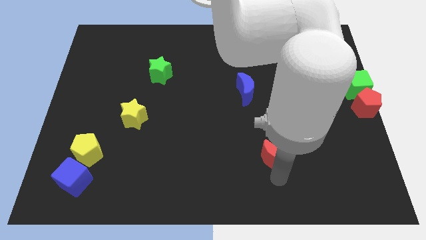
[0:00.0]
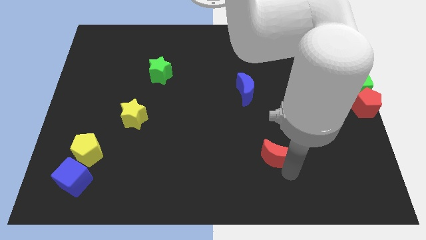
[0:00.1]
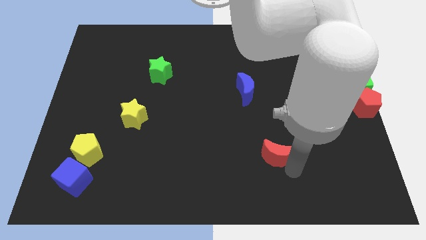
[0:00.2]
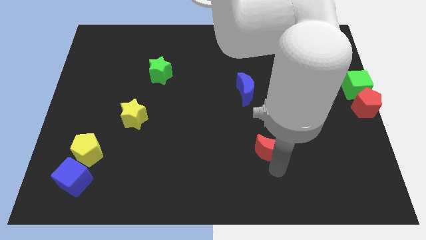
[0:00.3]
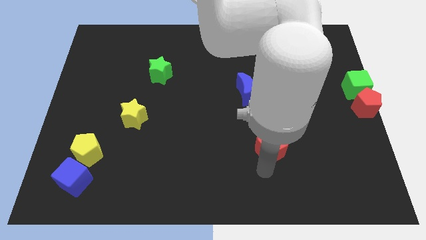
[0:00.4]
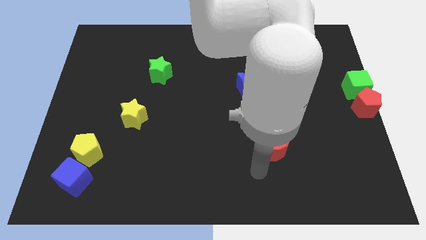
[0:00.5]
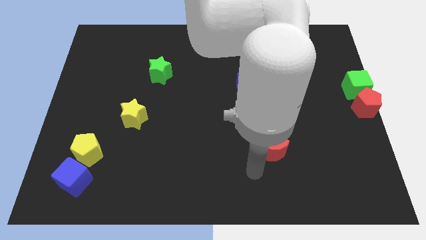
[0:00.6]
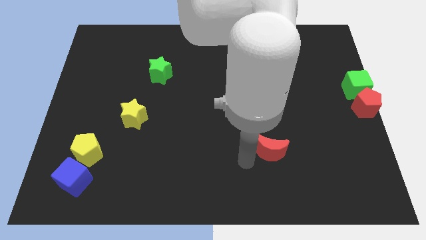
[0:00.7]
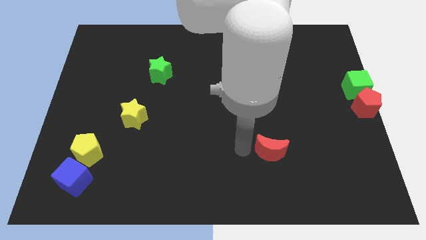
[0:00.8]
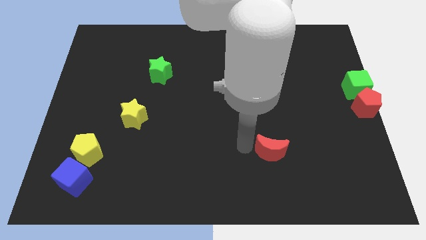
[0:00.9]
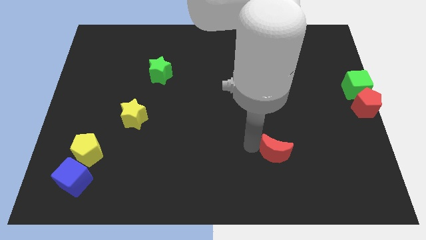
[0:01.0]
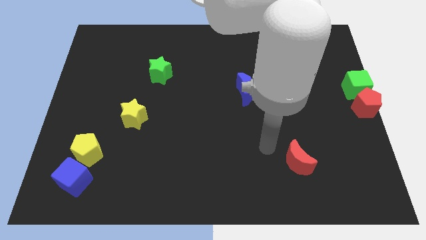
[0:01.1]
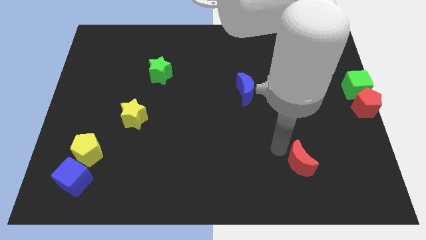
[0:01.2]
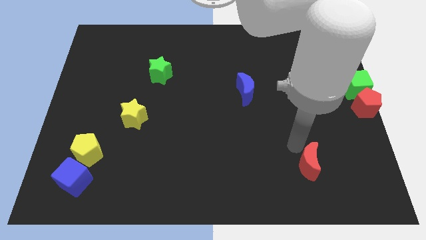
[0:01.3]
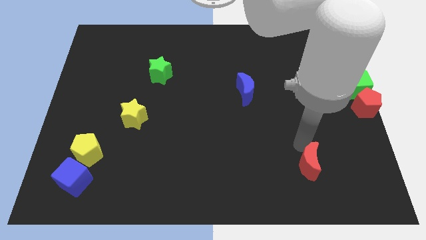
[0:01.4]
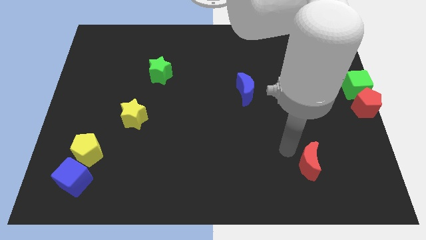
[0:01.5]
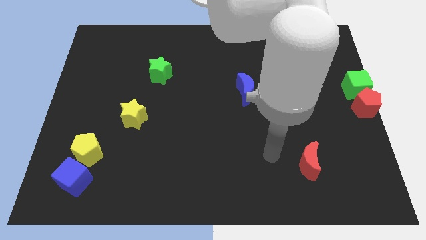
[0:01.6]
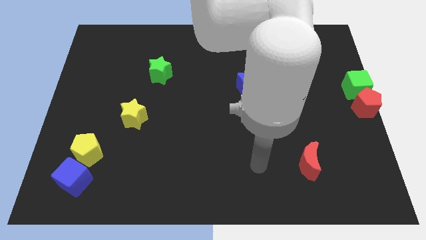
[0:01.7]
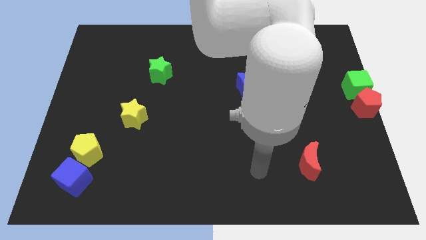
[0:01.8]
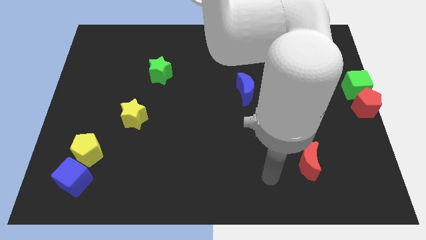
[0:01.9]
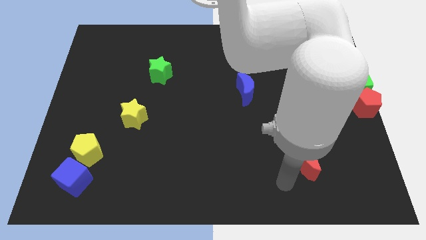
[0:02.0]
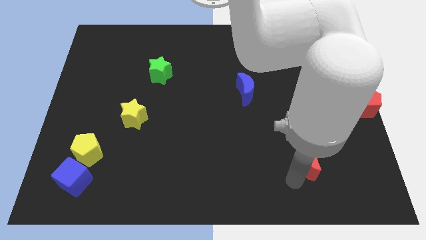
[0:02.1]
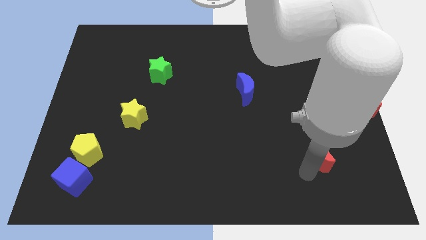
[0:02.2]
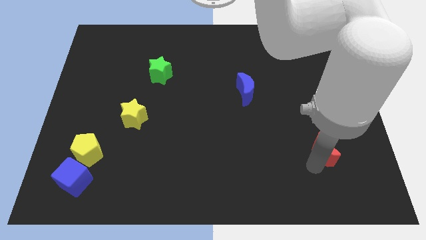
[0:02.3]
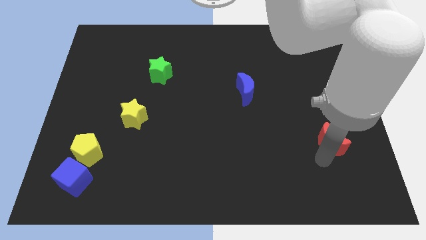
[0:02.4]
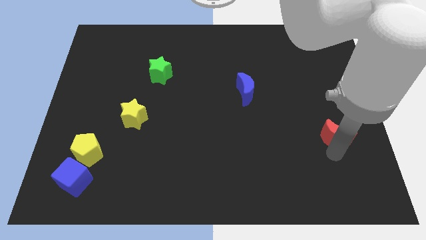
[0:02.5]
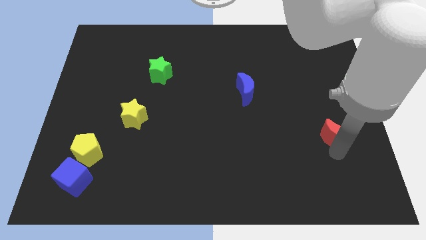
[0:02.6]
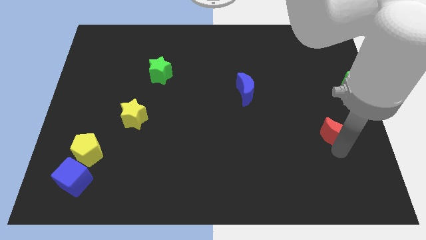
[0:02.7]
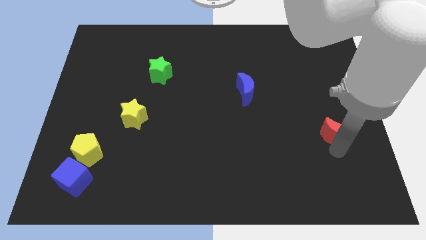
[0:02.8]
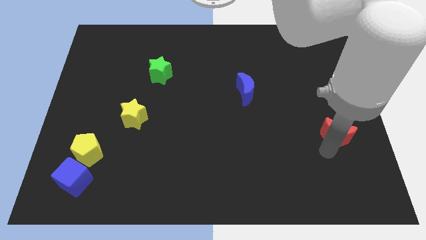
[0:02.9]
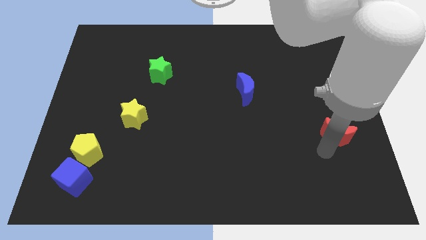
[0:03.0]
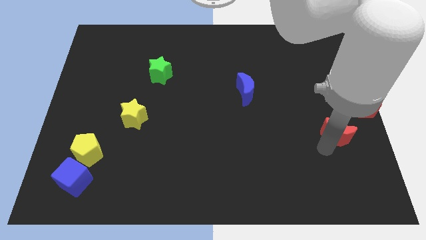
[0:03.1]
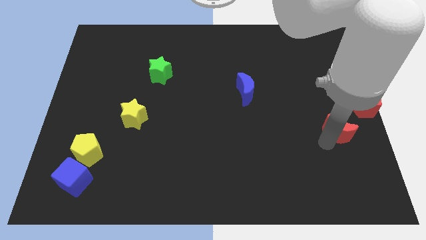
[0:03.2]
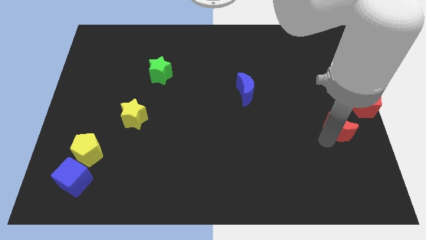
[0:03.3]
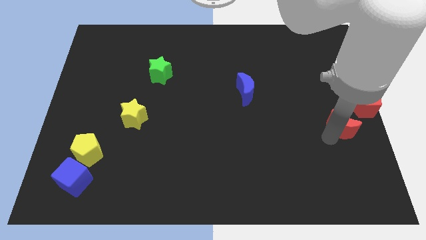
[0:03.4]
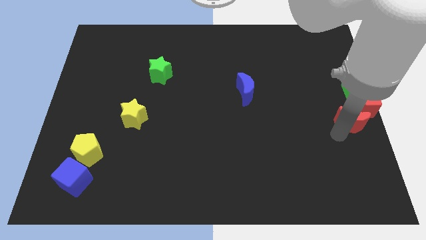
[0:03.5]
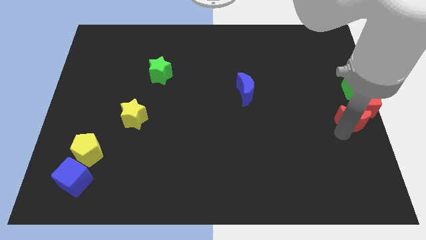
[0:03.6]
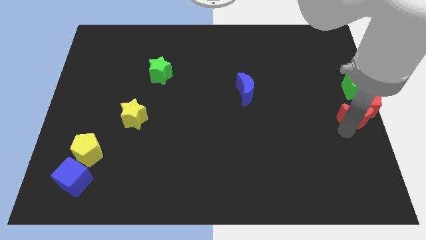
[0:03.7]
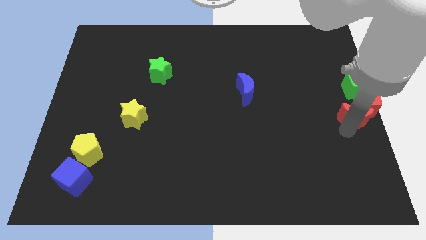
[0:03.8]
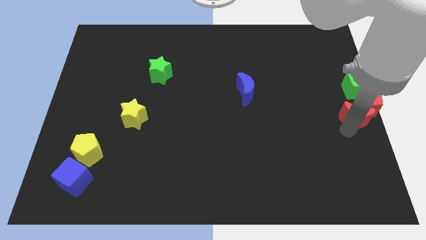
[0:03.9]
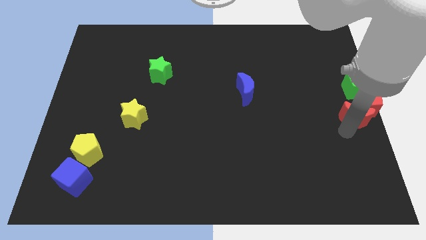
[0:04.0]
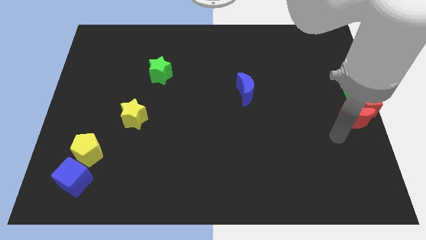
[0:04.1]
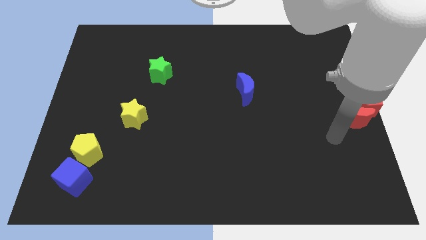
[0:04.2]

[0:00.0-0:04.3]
push the red moon close to the red pentagon

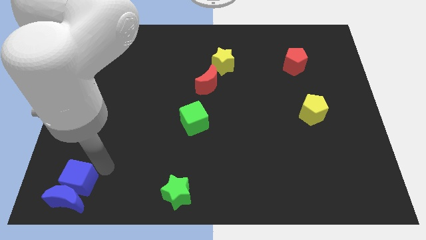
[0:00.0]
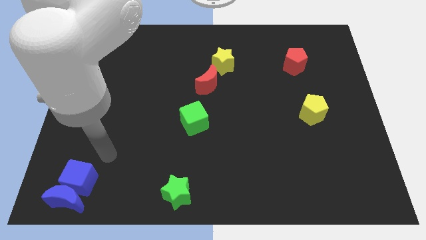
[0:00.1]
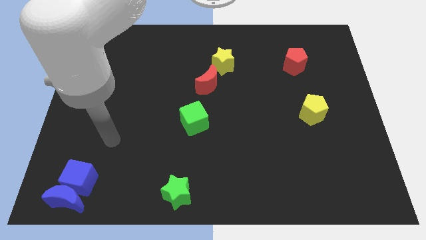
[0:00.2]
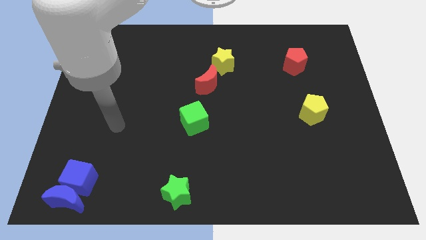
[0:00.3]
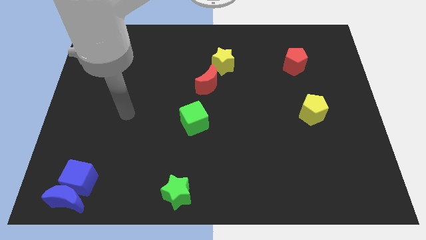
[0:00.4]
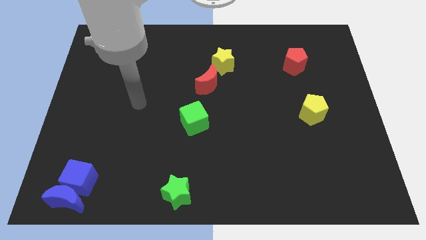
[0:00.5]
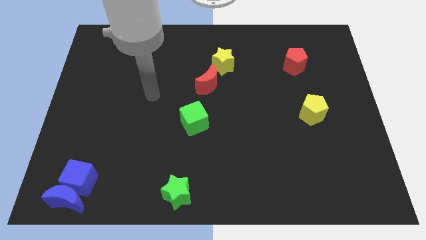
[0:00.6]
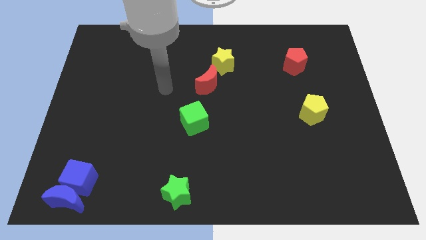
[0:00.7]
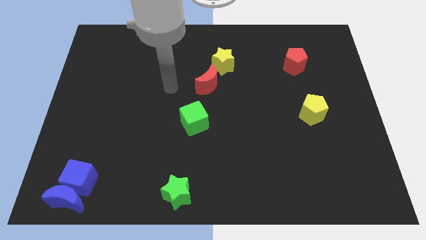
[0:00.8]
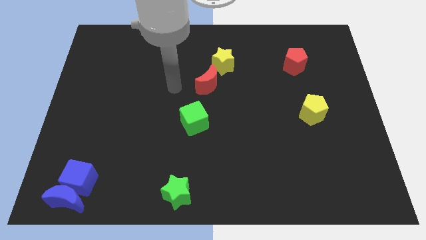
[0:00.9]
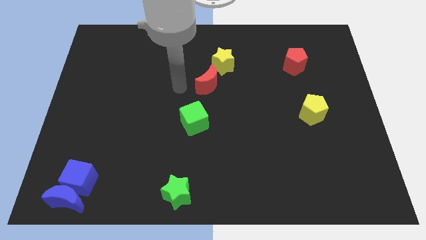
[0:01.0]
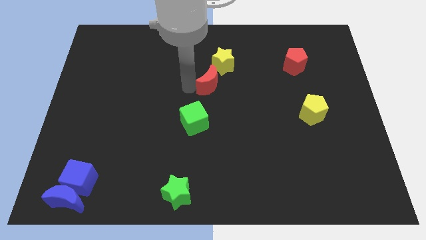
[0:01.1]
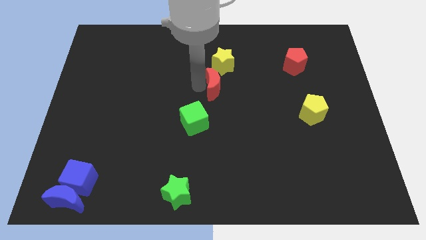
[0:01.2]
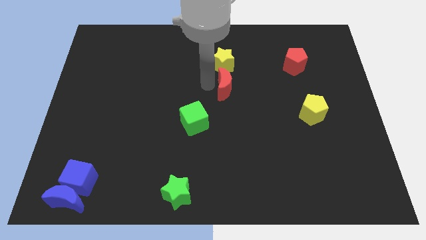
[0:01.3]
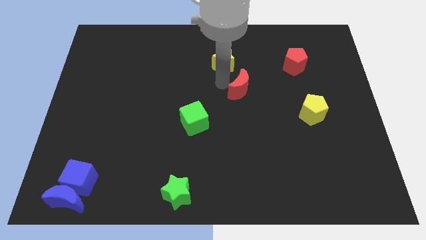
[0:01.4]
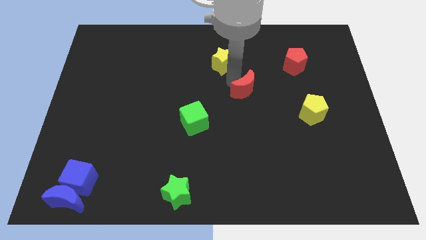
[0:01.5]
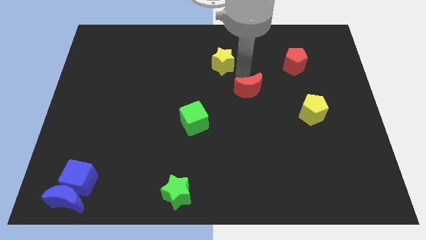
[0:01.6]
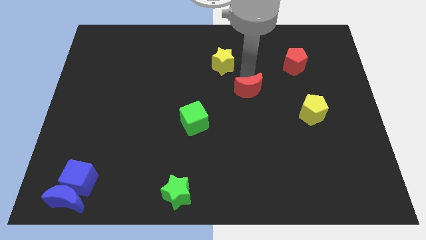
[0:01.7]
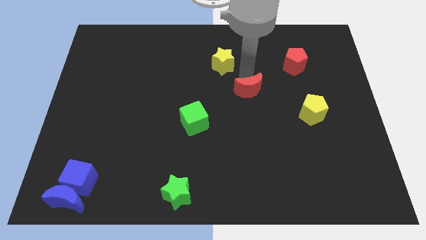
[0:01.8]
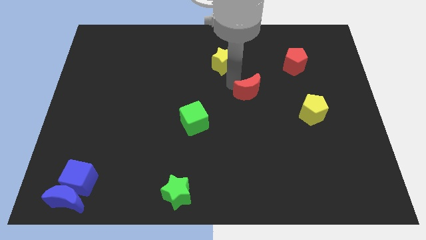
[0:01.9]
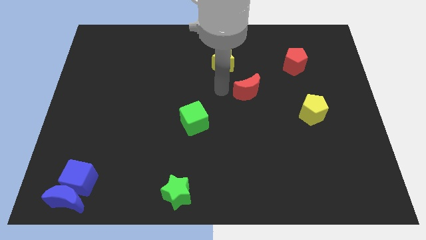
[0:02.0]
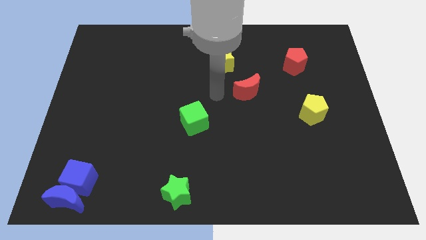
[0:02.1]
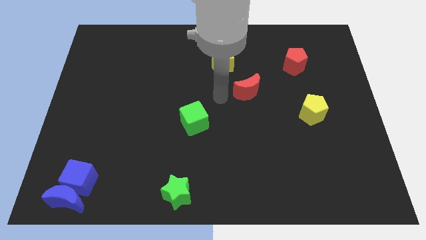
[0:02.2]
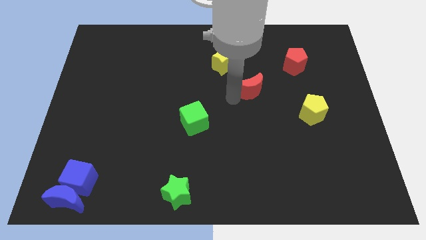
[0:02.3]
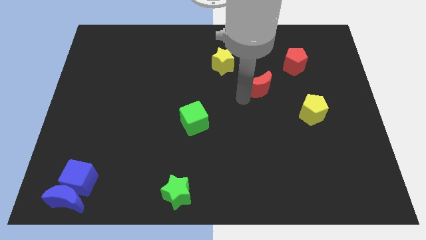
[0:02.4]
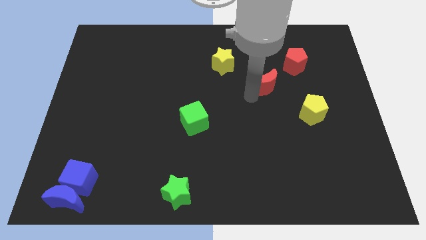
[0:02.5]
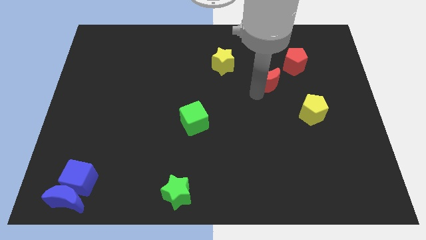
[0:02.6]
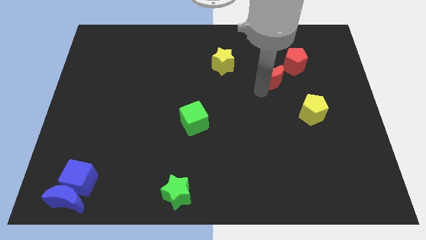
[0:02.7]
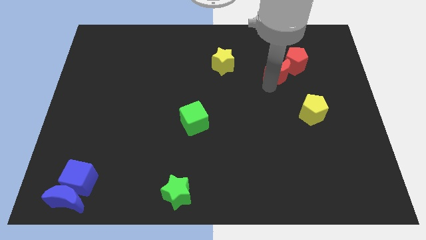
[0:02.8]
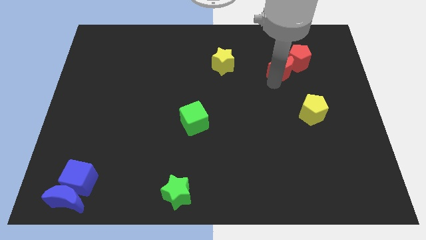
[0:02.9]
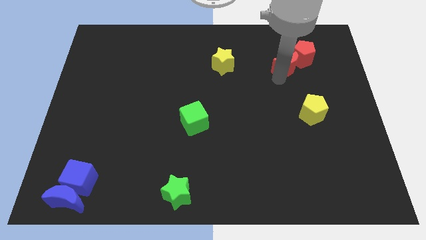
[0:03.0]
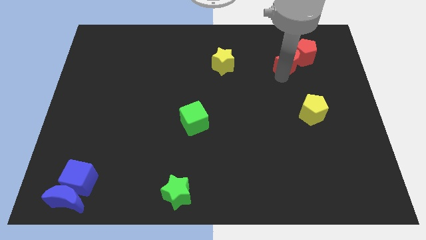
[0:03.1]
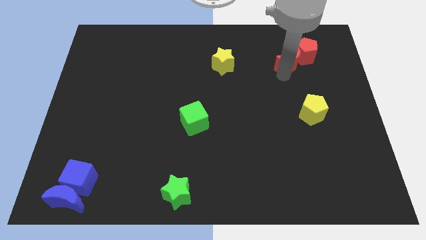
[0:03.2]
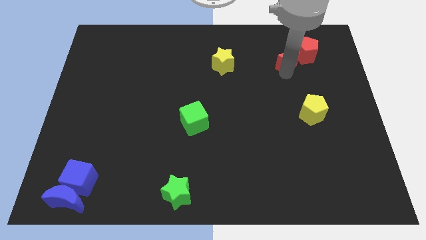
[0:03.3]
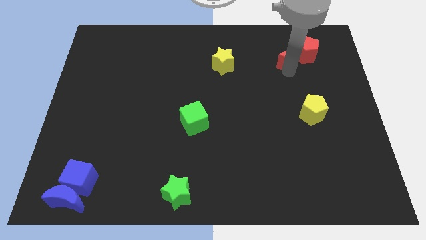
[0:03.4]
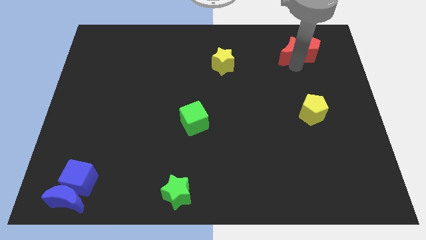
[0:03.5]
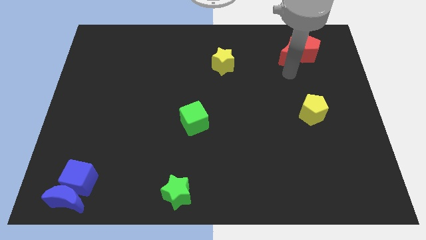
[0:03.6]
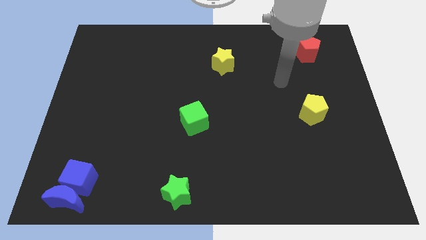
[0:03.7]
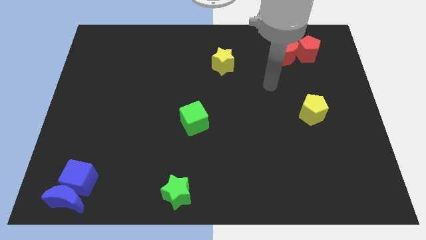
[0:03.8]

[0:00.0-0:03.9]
push the red pentagon with the red moon

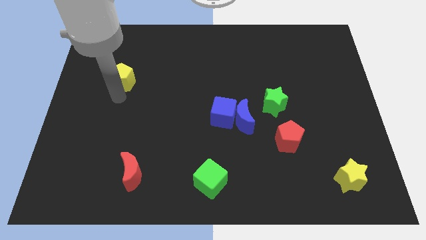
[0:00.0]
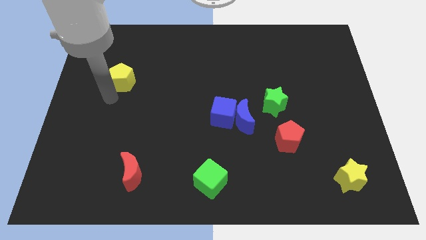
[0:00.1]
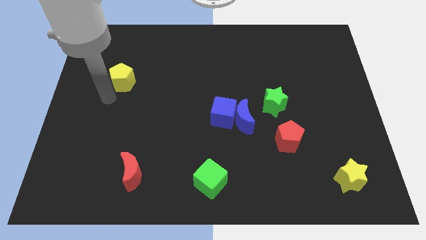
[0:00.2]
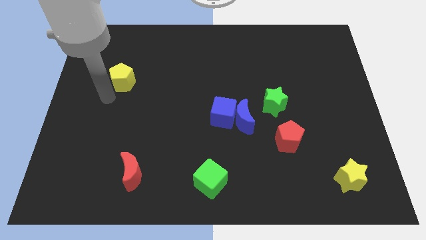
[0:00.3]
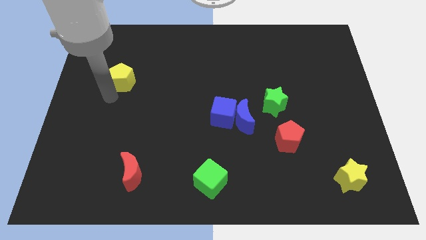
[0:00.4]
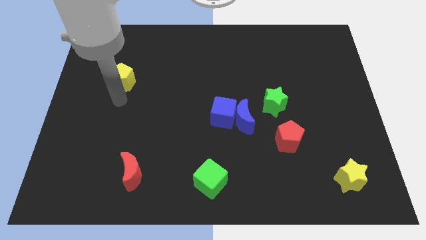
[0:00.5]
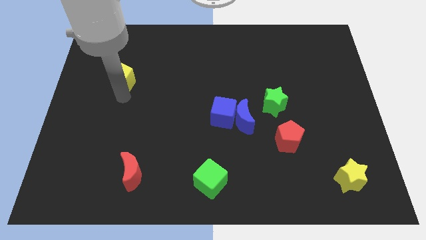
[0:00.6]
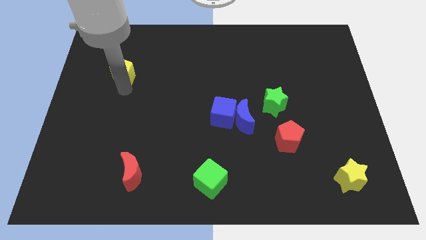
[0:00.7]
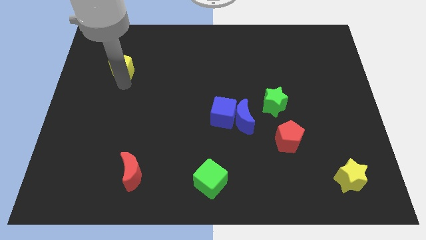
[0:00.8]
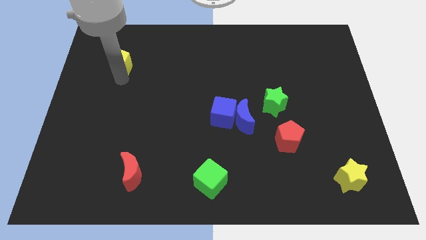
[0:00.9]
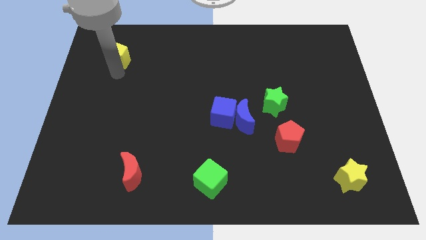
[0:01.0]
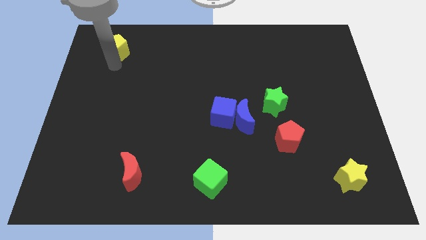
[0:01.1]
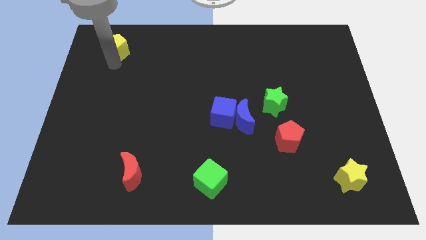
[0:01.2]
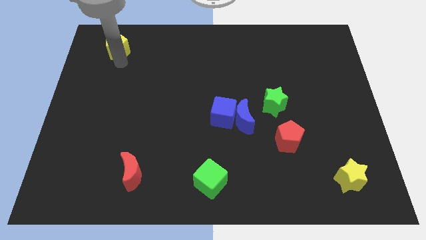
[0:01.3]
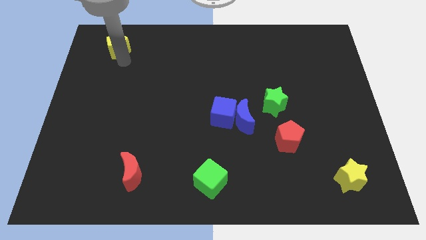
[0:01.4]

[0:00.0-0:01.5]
slide the yellow pentagon diagonally top left to the green star
